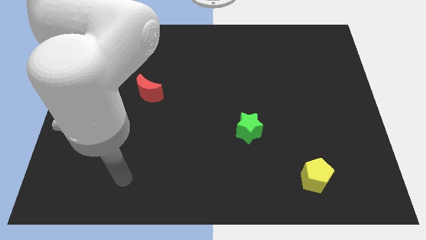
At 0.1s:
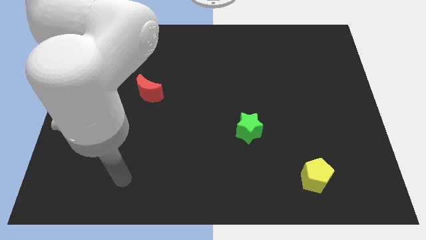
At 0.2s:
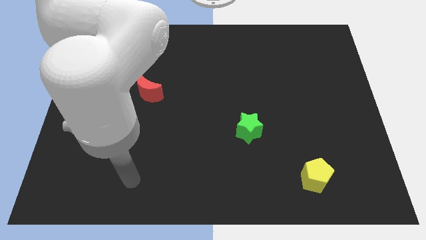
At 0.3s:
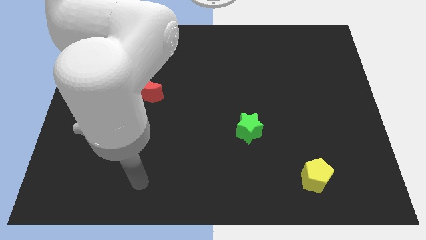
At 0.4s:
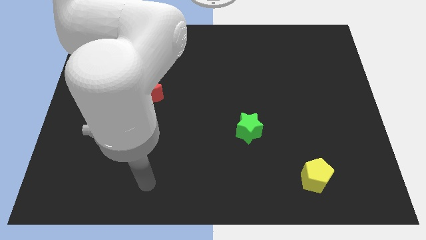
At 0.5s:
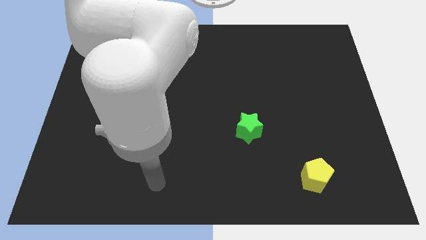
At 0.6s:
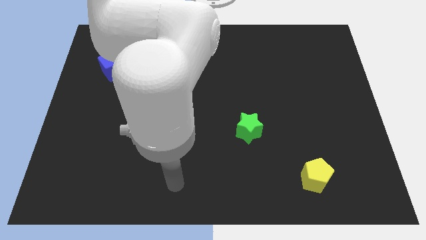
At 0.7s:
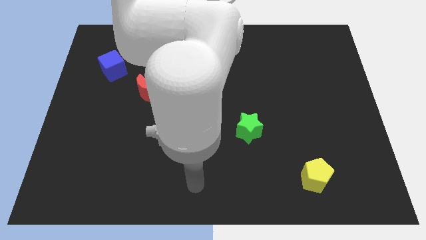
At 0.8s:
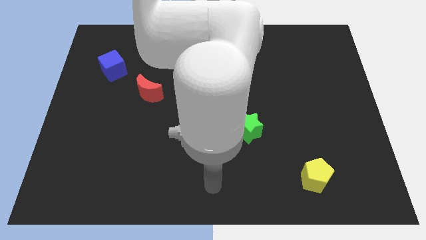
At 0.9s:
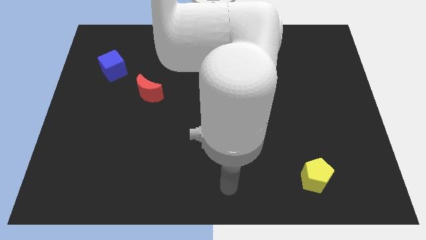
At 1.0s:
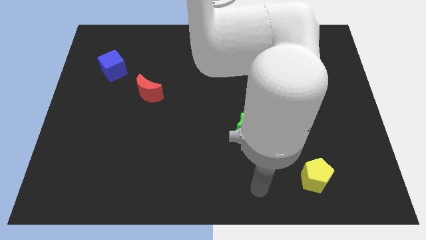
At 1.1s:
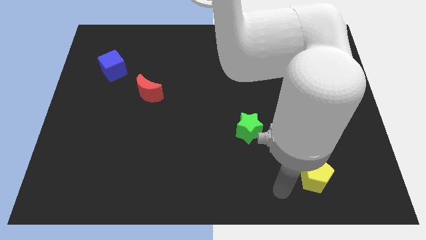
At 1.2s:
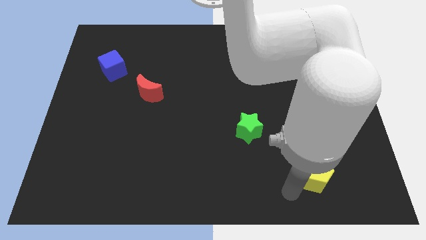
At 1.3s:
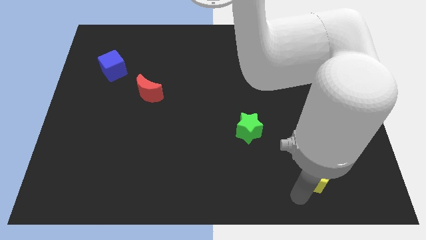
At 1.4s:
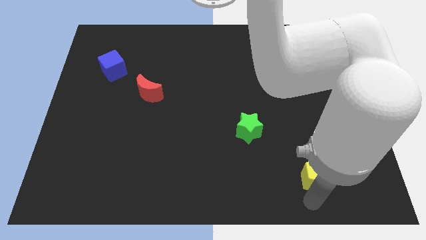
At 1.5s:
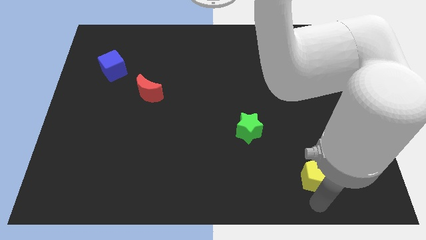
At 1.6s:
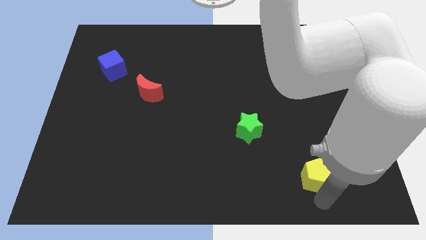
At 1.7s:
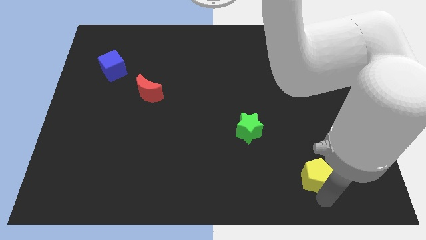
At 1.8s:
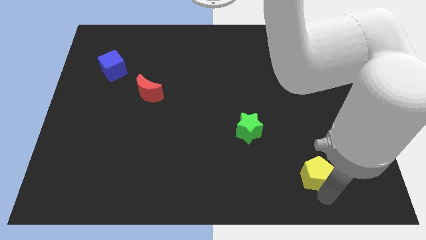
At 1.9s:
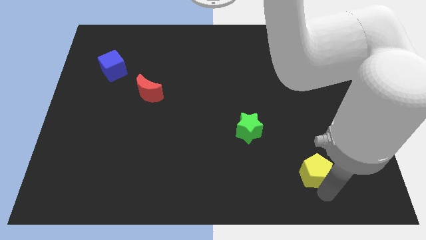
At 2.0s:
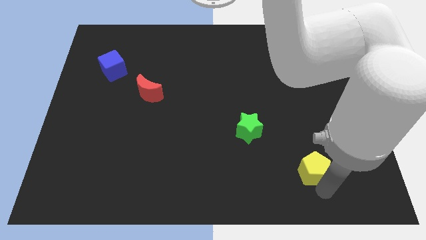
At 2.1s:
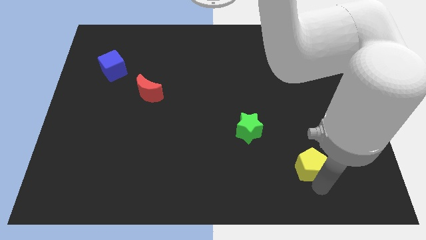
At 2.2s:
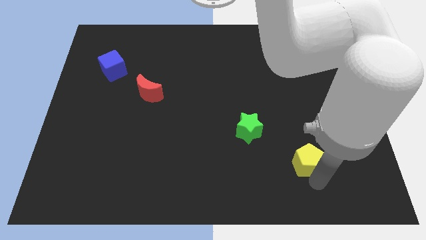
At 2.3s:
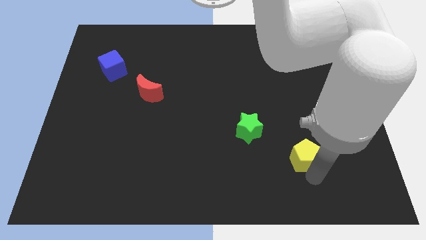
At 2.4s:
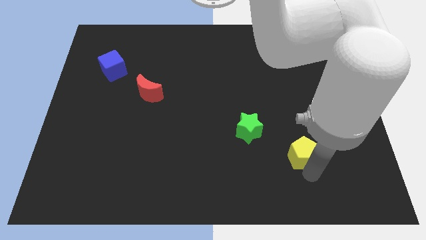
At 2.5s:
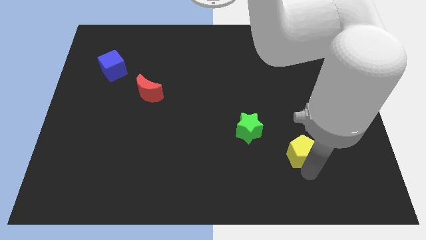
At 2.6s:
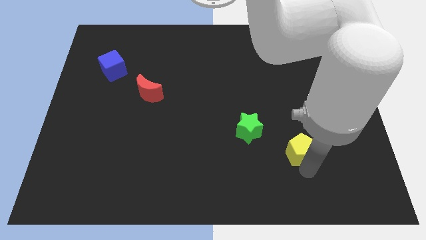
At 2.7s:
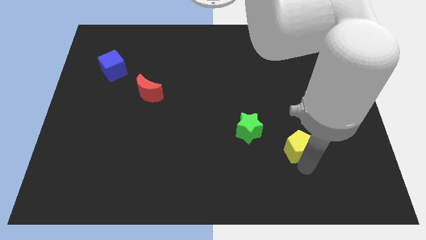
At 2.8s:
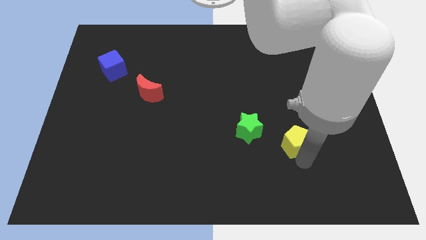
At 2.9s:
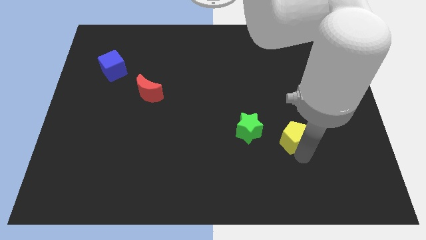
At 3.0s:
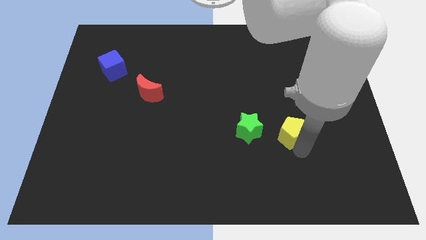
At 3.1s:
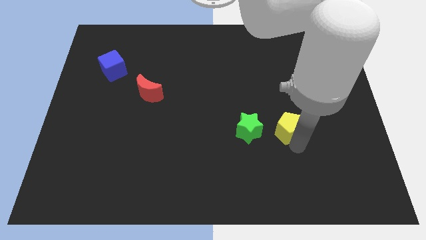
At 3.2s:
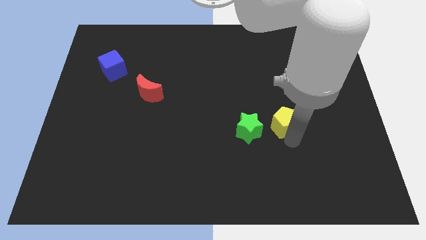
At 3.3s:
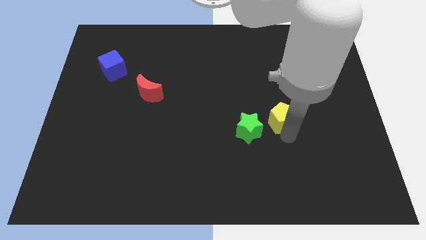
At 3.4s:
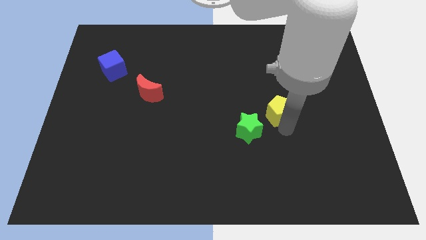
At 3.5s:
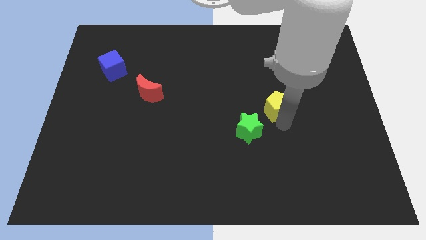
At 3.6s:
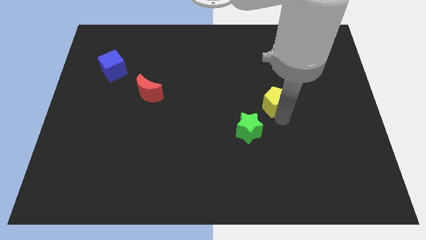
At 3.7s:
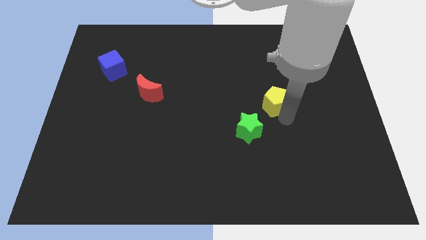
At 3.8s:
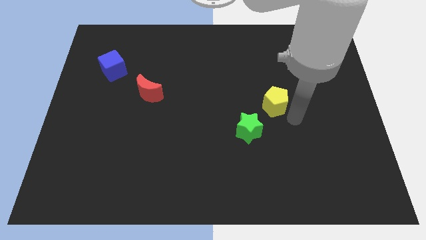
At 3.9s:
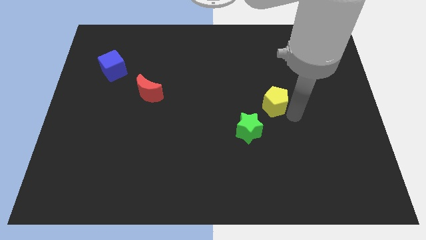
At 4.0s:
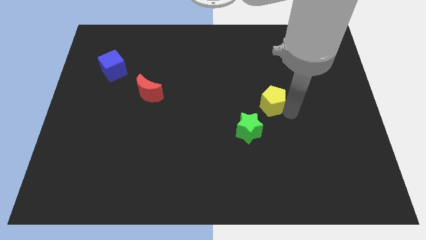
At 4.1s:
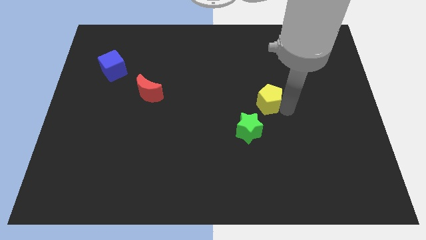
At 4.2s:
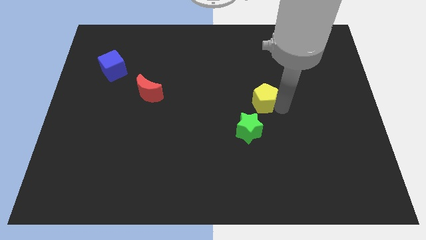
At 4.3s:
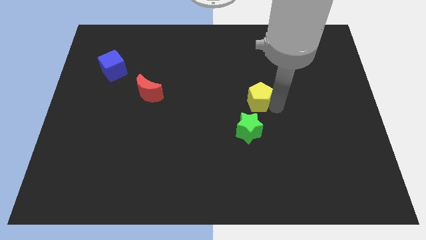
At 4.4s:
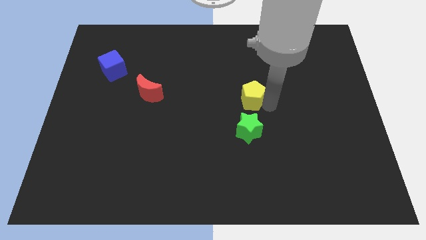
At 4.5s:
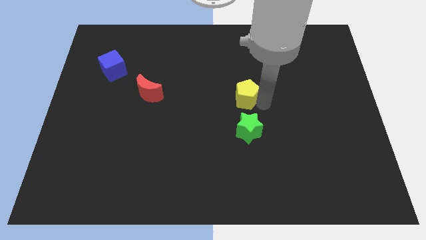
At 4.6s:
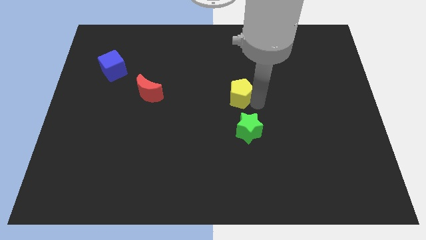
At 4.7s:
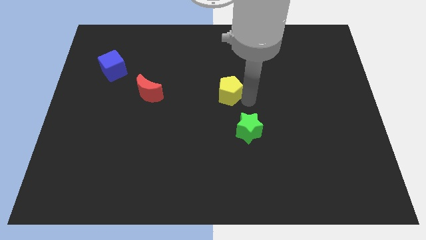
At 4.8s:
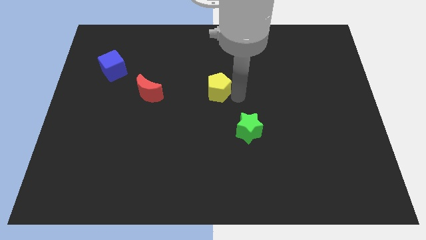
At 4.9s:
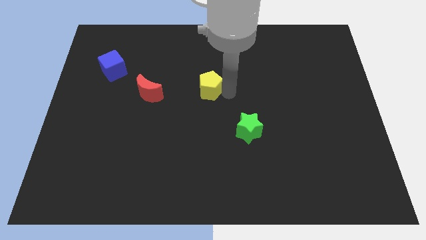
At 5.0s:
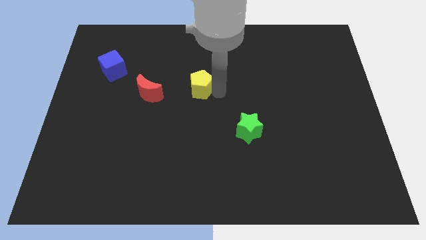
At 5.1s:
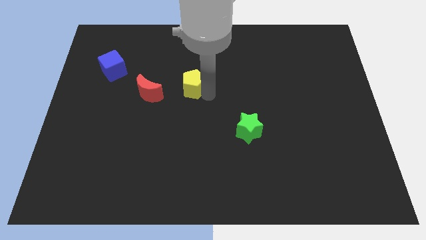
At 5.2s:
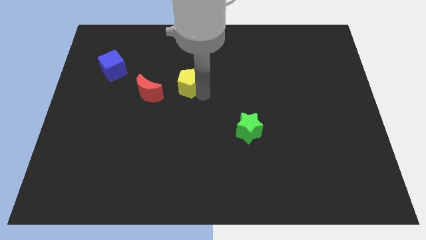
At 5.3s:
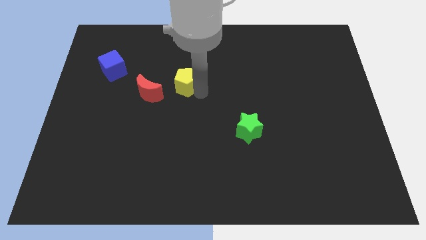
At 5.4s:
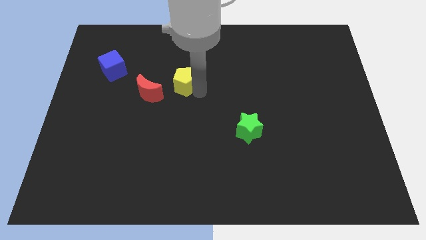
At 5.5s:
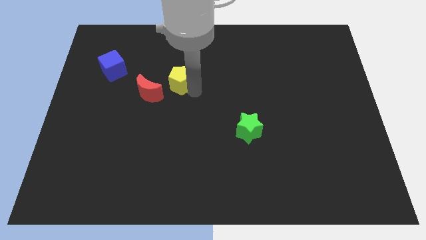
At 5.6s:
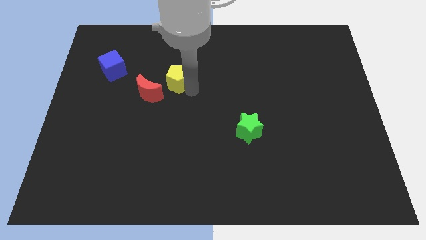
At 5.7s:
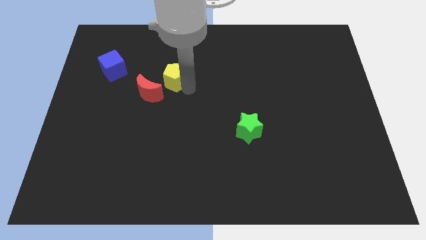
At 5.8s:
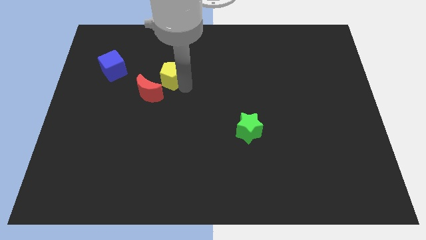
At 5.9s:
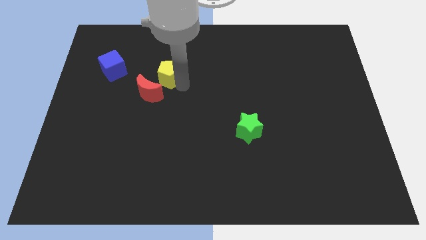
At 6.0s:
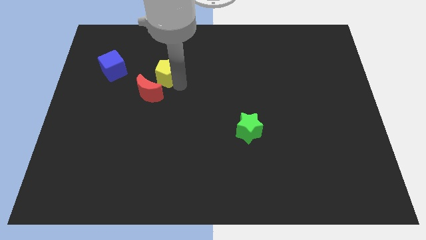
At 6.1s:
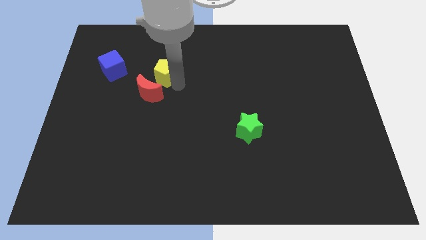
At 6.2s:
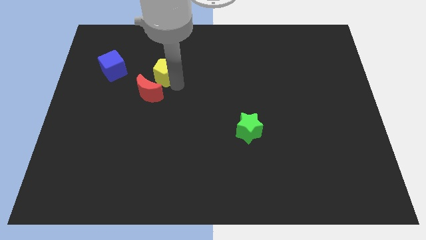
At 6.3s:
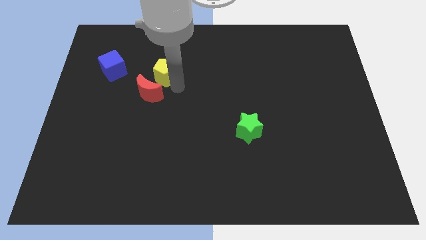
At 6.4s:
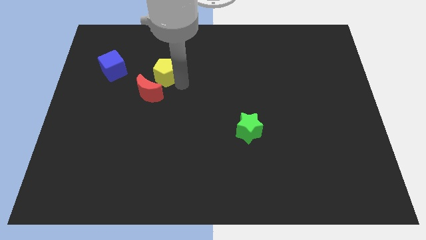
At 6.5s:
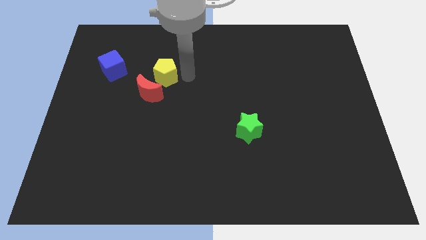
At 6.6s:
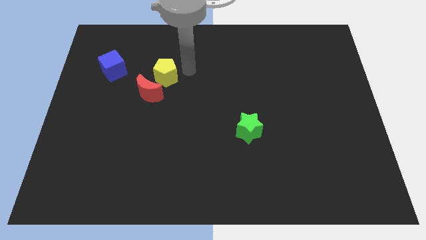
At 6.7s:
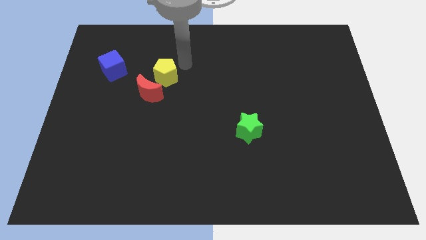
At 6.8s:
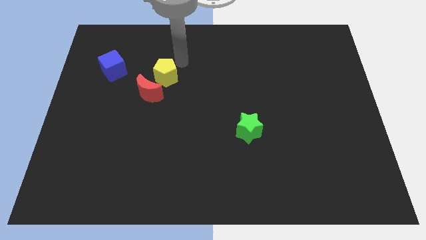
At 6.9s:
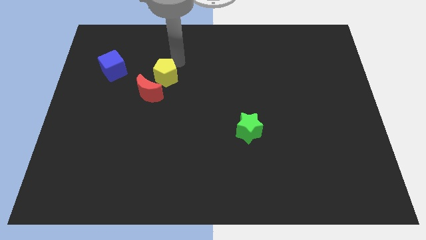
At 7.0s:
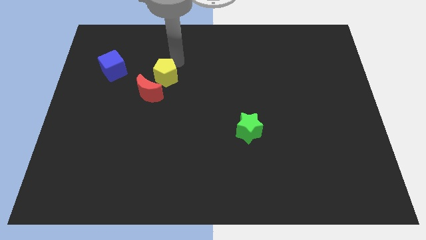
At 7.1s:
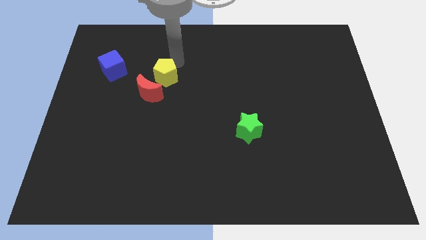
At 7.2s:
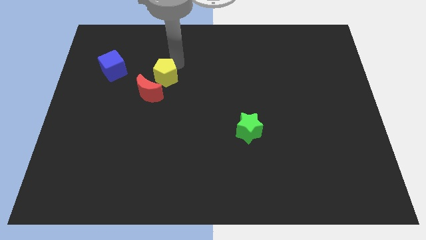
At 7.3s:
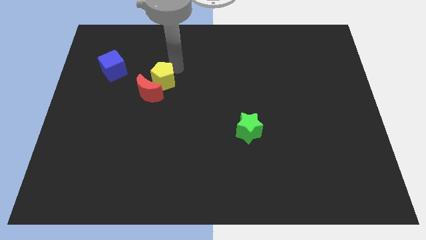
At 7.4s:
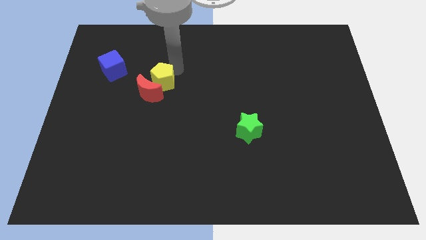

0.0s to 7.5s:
slide the pentagon next to the red moon

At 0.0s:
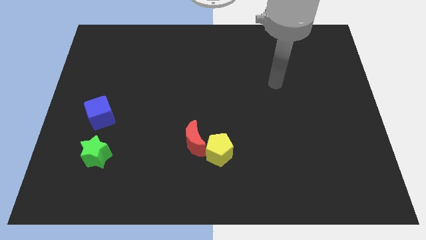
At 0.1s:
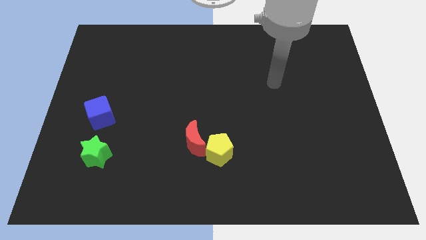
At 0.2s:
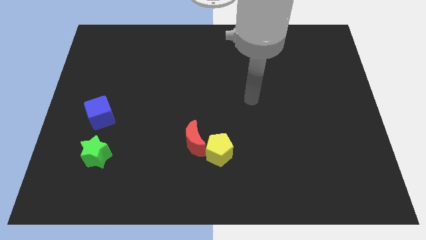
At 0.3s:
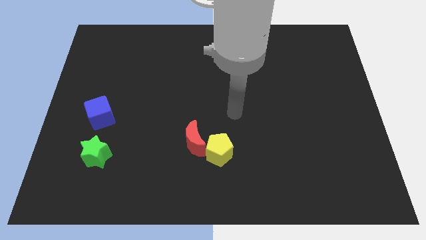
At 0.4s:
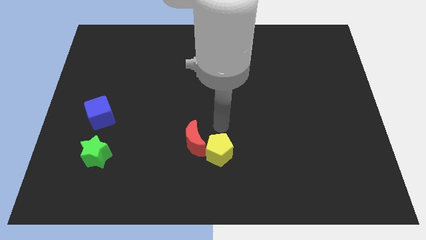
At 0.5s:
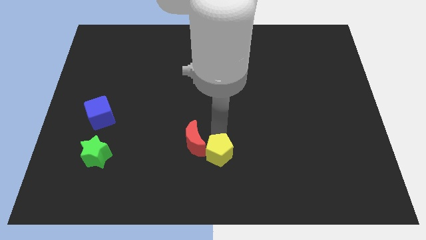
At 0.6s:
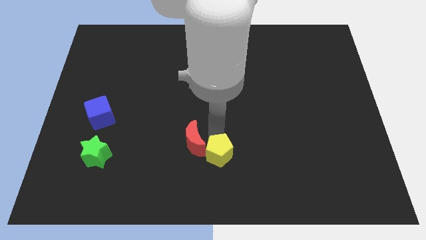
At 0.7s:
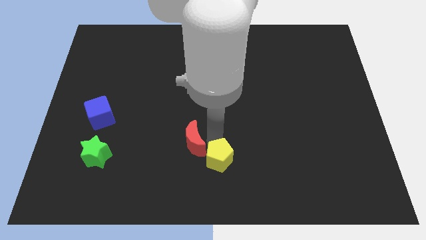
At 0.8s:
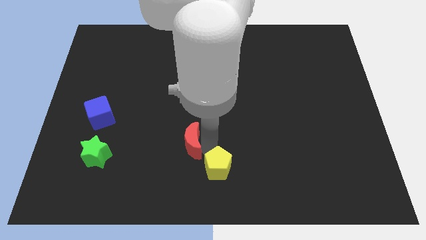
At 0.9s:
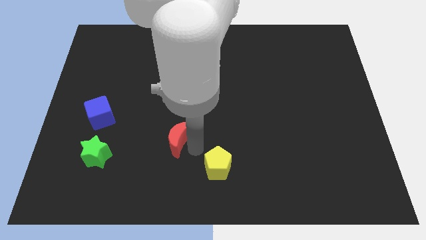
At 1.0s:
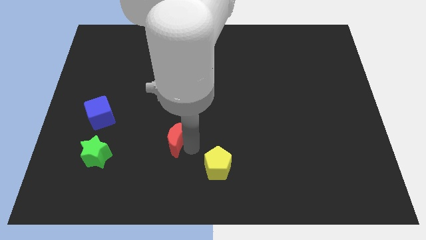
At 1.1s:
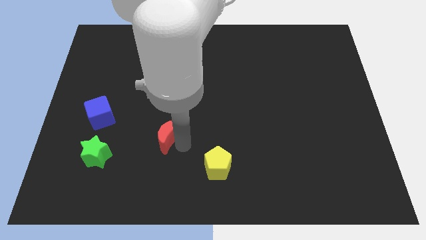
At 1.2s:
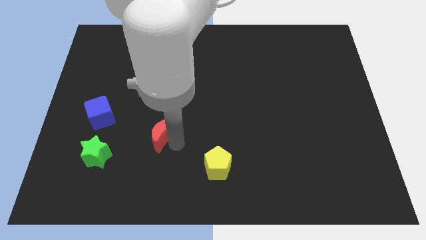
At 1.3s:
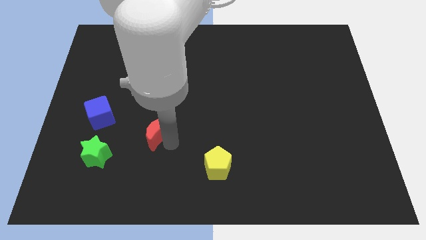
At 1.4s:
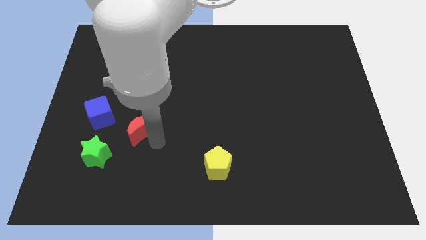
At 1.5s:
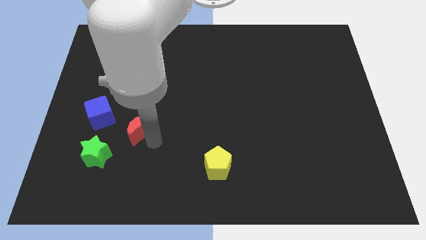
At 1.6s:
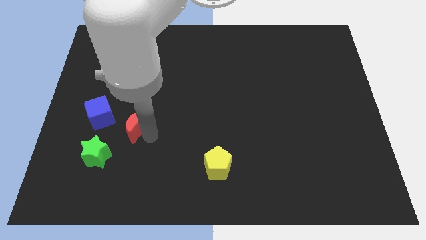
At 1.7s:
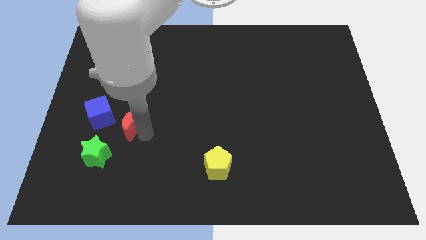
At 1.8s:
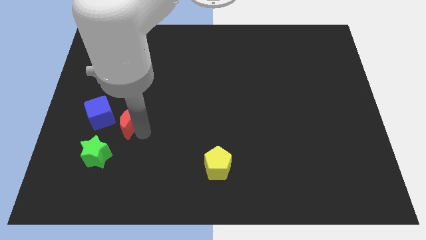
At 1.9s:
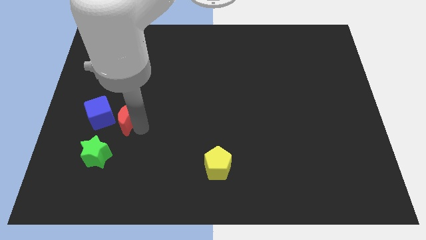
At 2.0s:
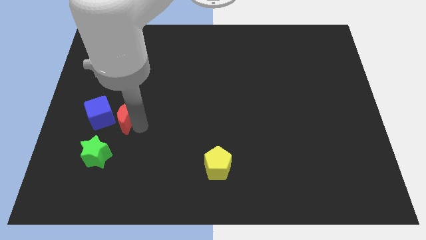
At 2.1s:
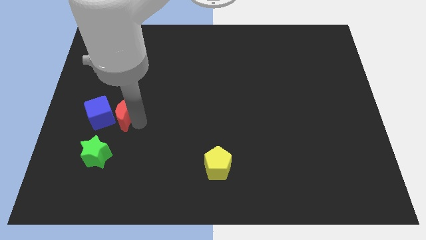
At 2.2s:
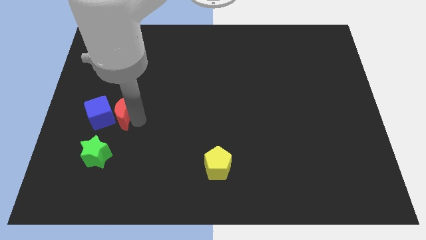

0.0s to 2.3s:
put the red moon next to the blue block
